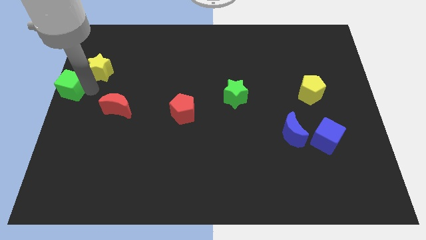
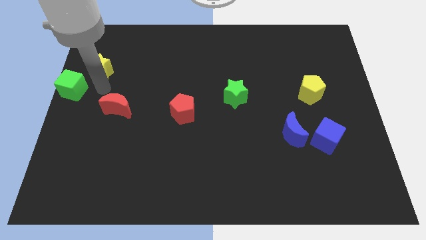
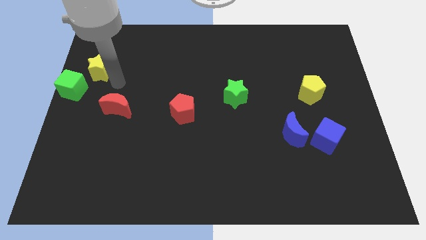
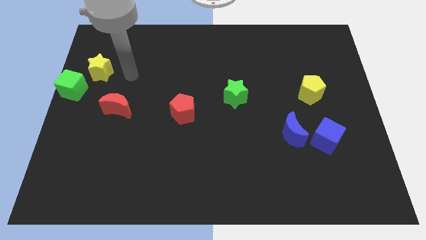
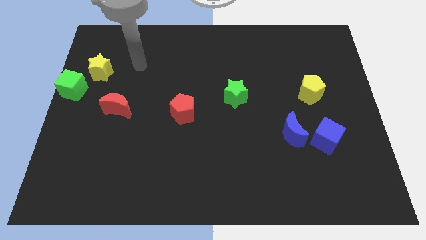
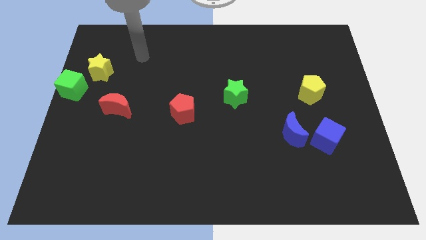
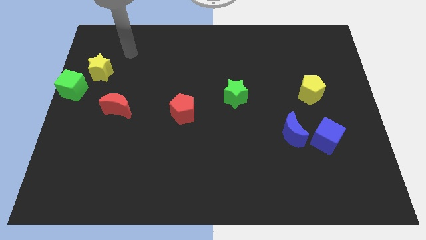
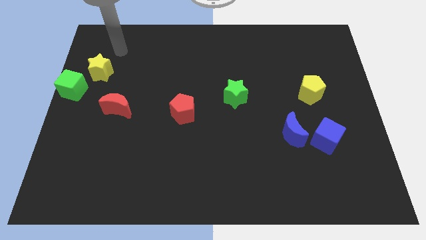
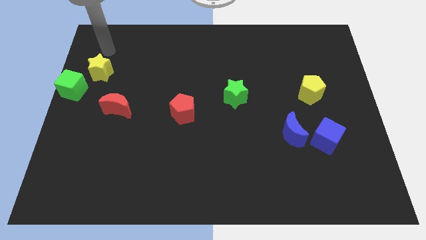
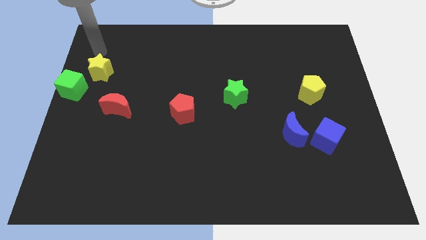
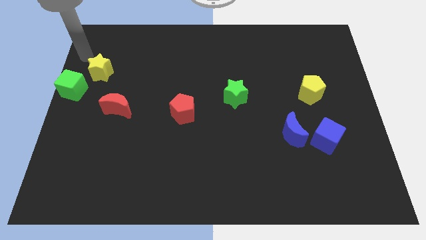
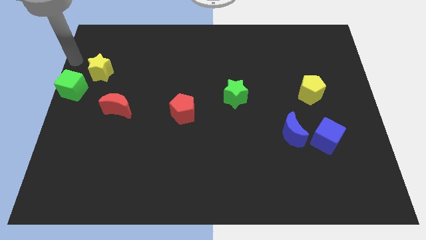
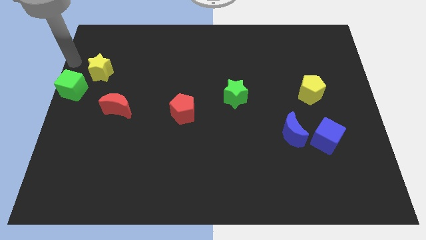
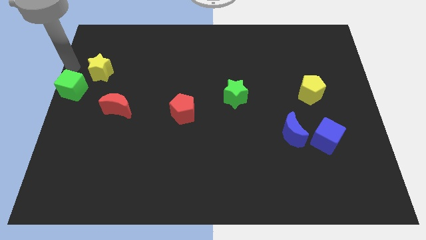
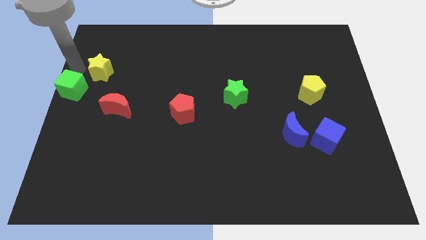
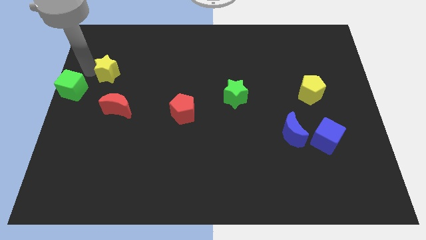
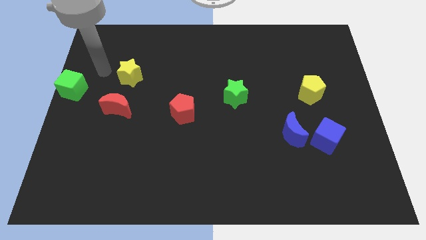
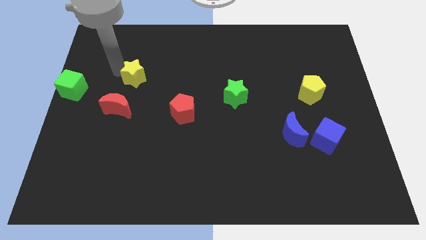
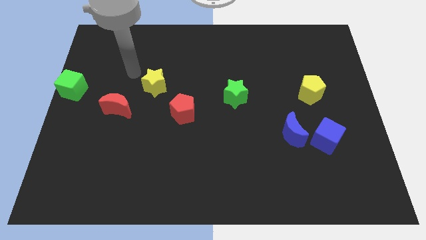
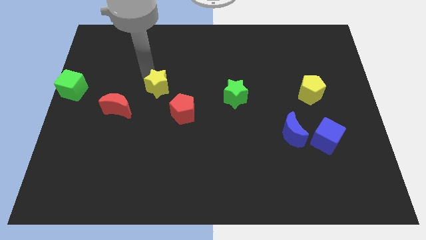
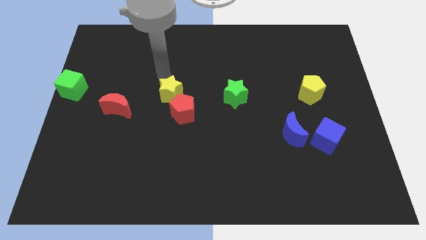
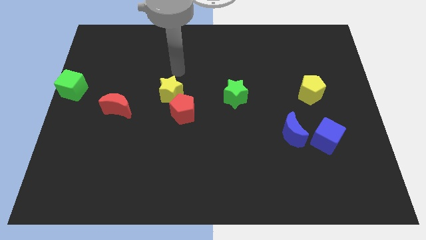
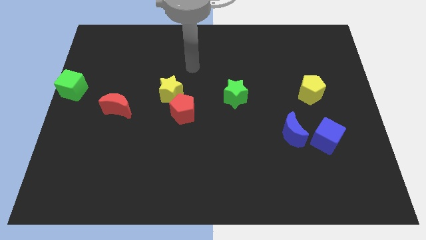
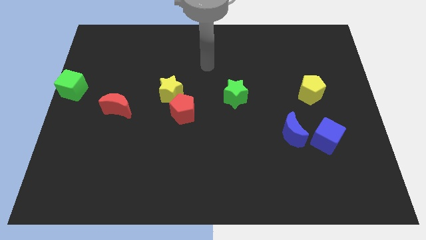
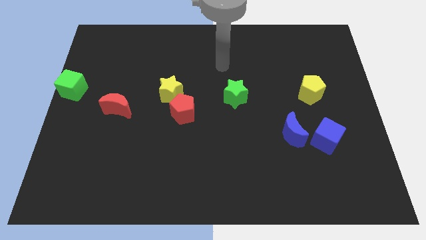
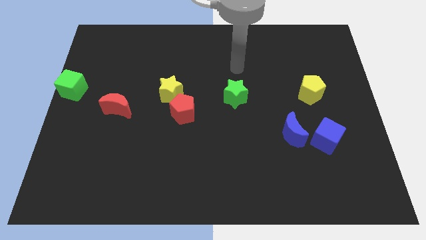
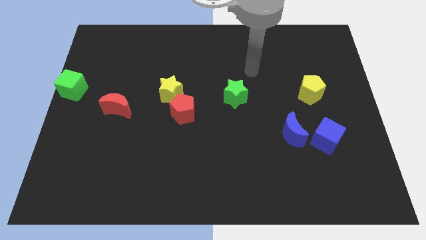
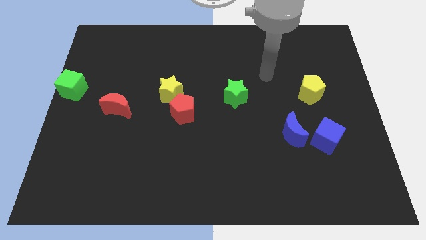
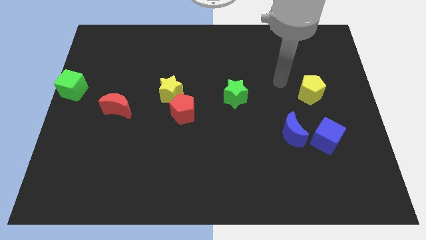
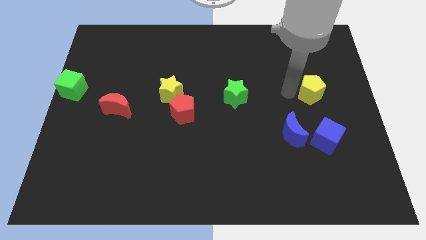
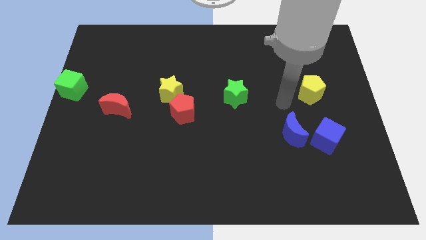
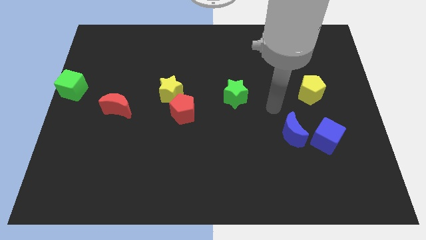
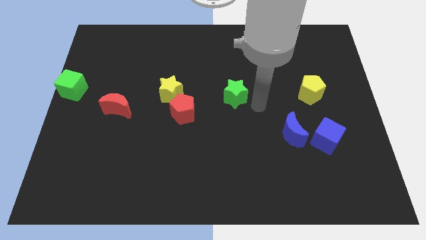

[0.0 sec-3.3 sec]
place the yellow star towards the top left side of the red pentagon

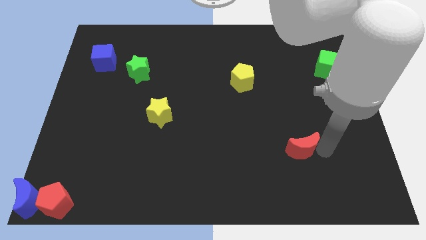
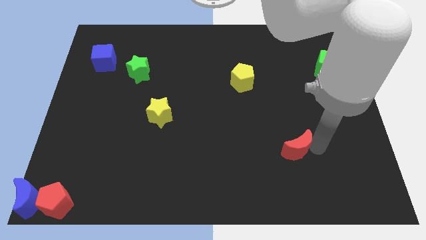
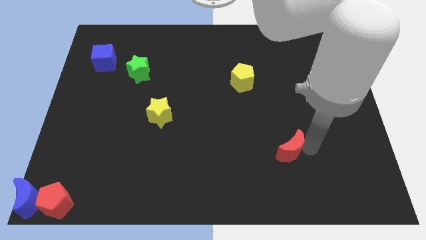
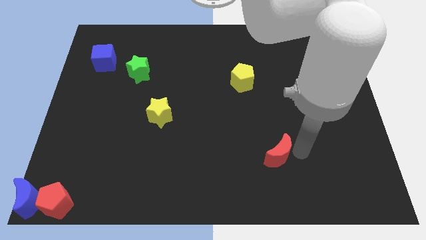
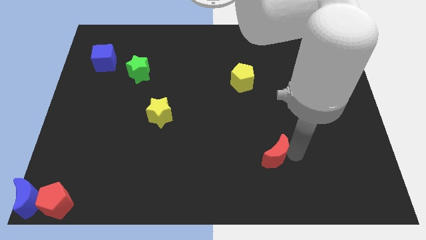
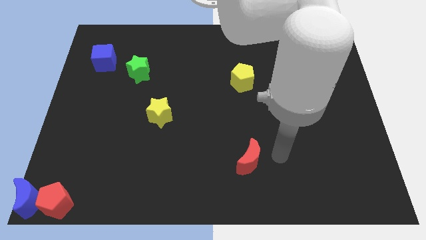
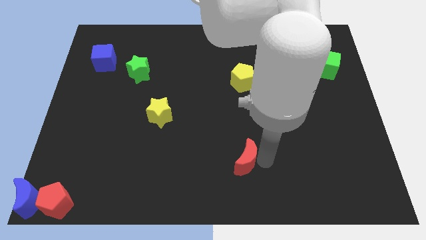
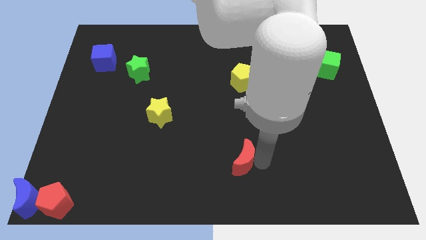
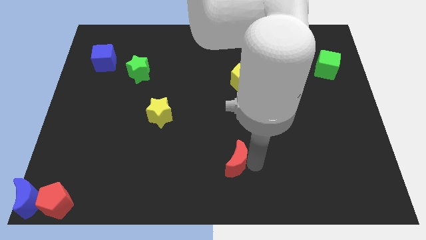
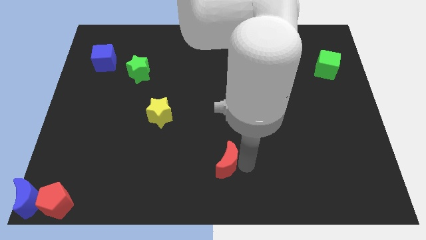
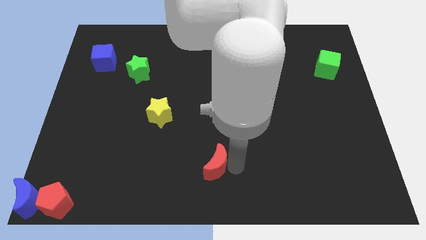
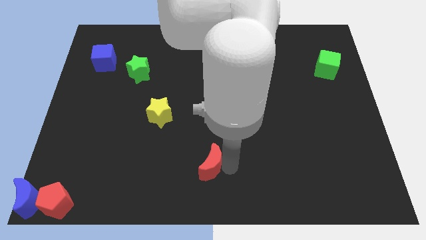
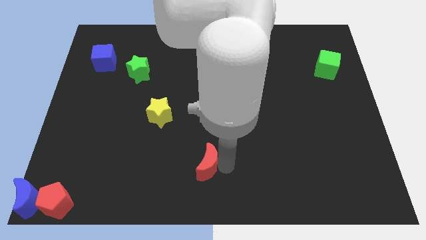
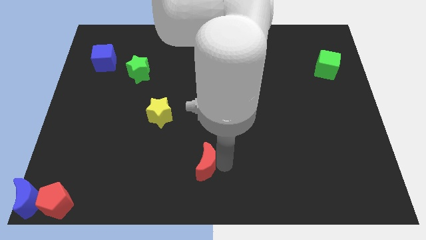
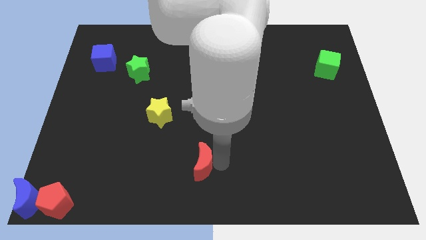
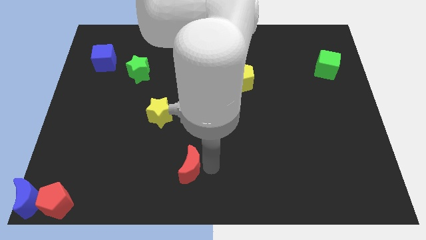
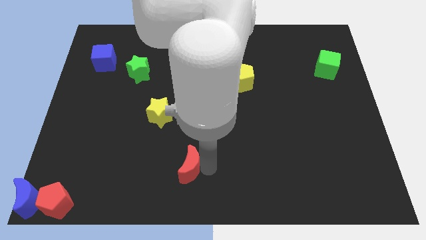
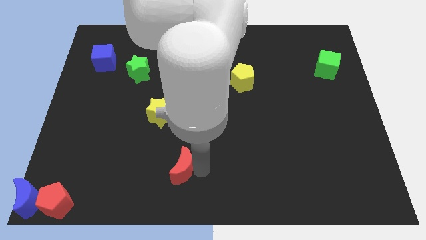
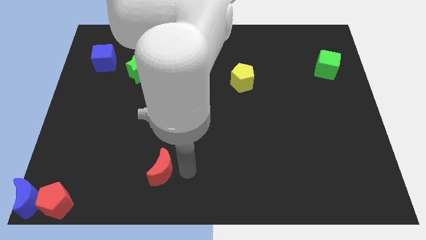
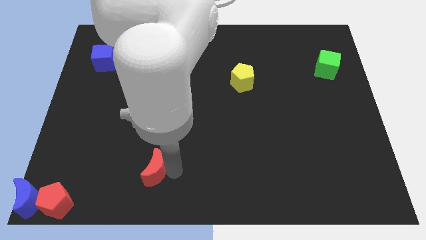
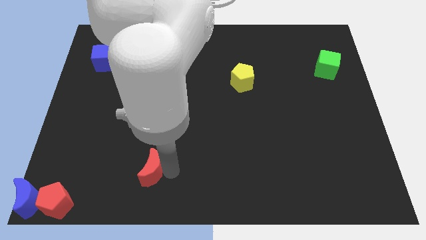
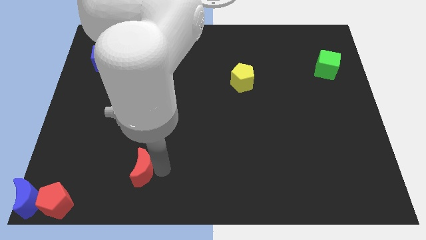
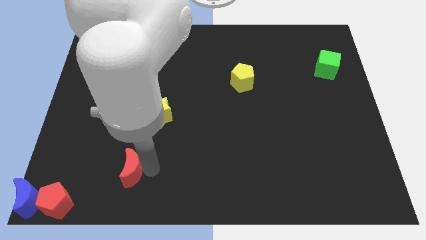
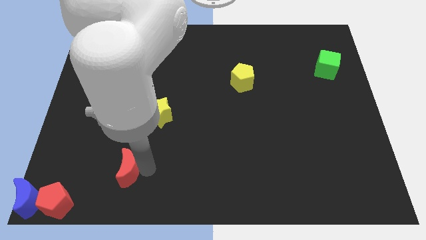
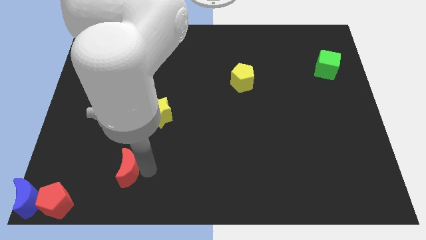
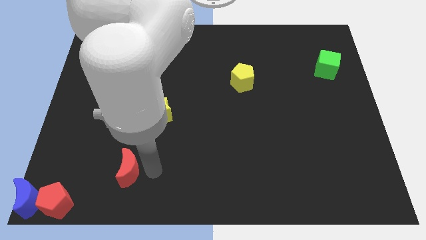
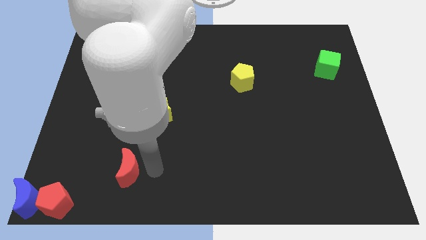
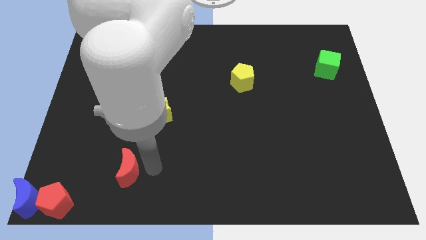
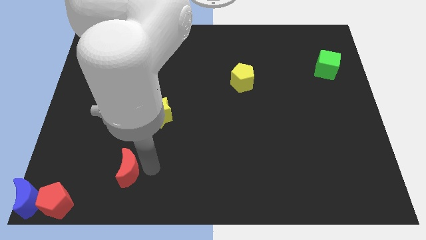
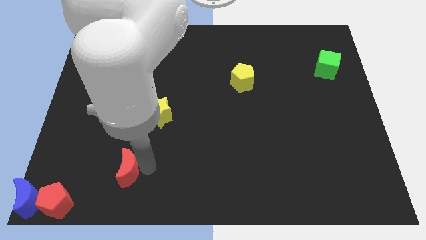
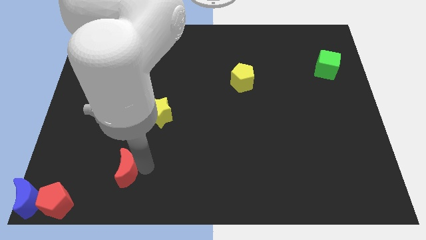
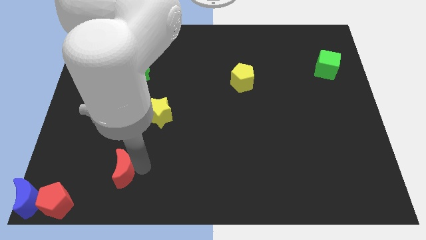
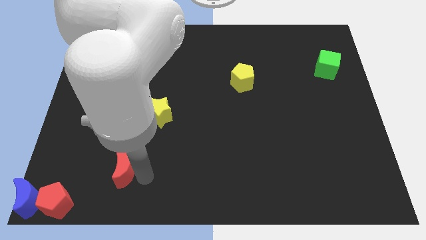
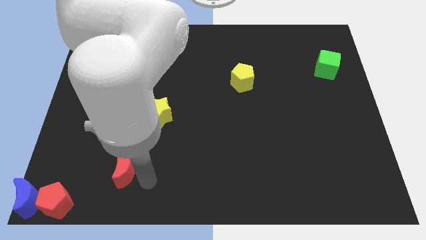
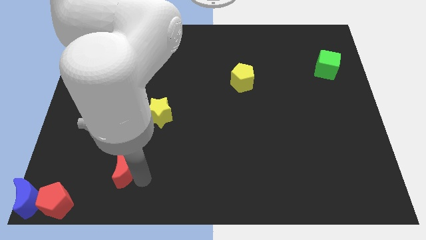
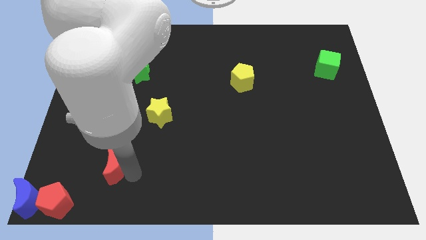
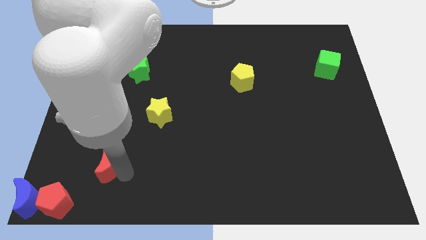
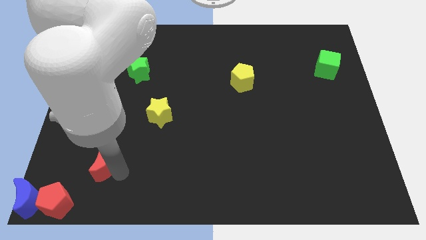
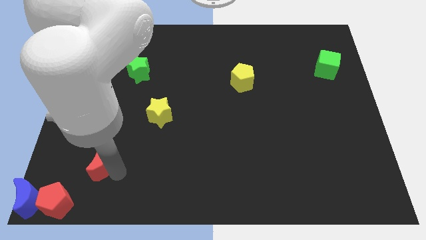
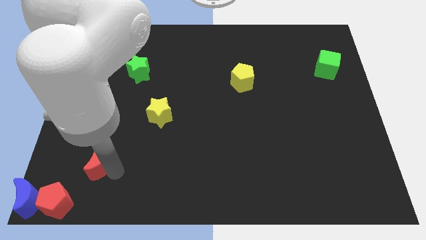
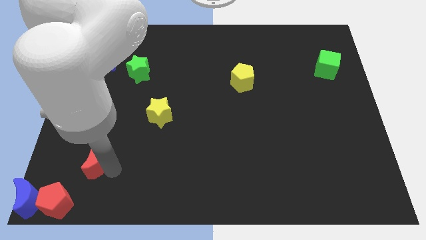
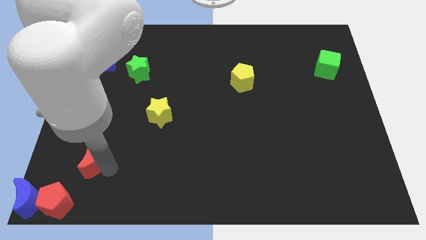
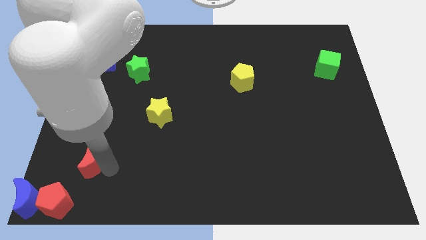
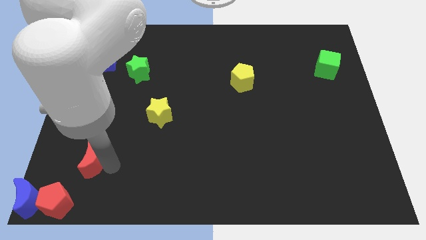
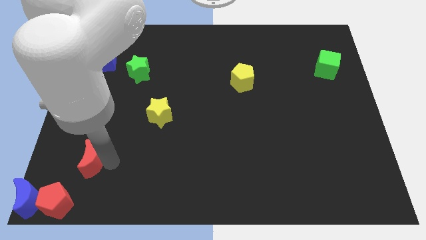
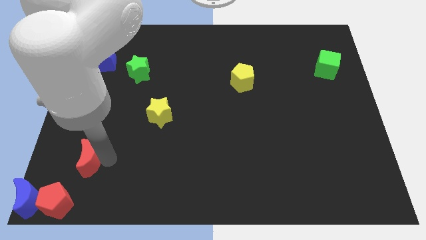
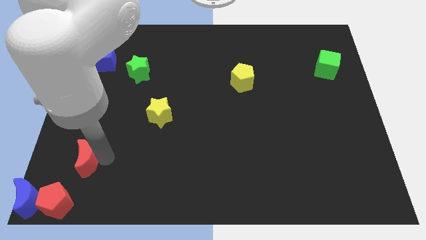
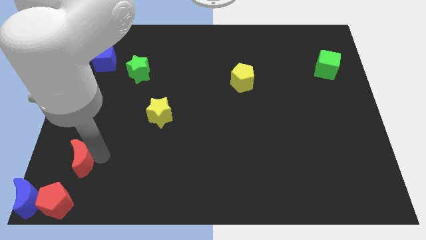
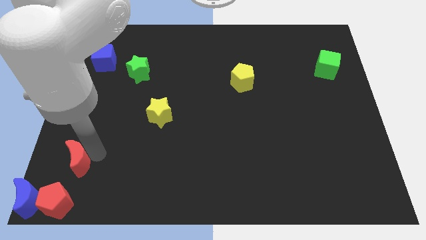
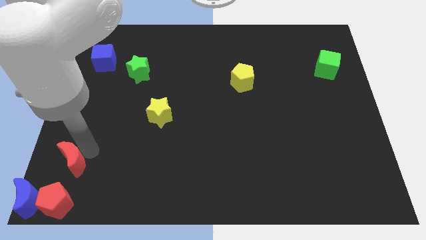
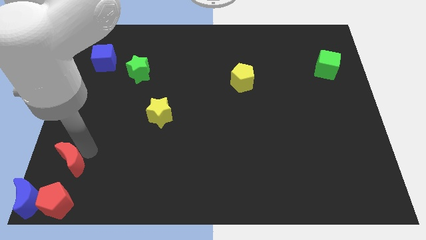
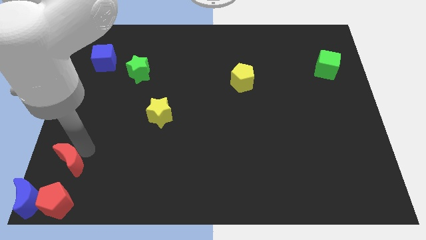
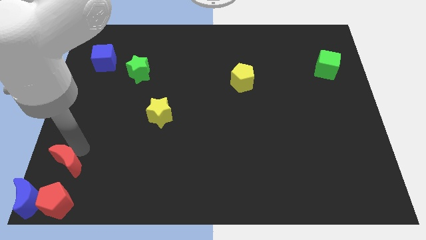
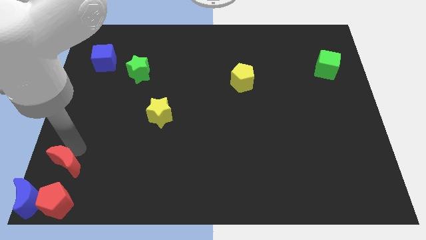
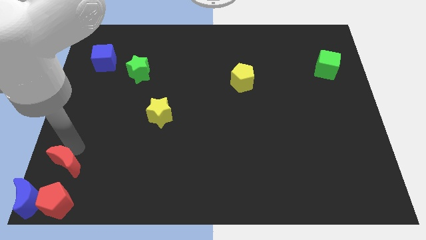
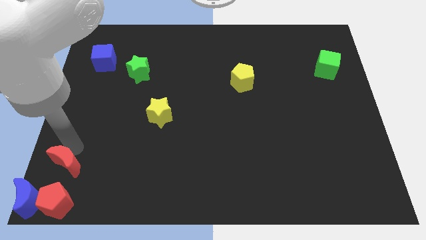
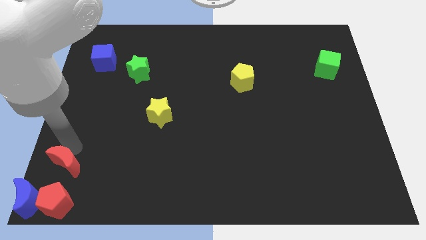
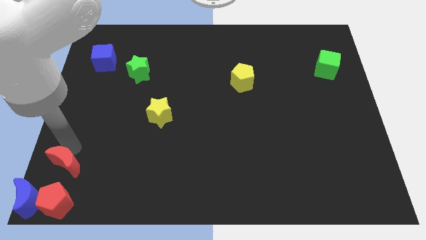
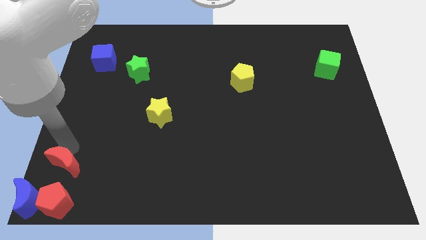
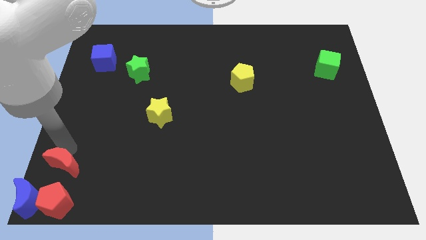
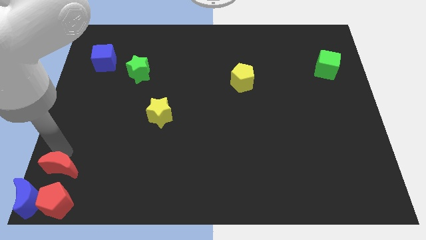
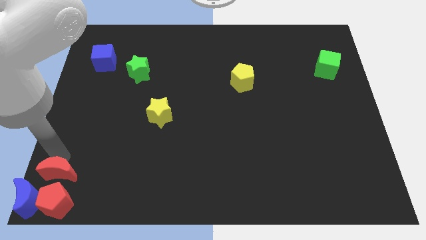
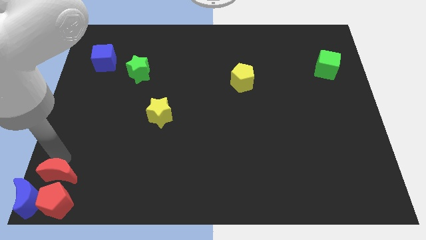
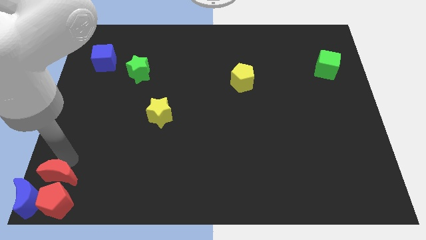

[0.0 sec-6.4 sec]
place the red moon above the red pentagon
